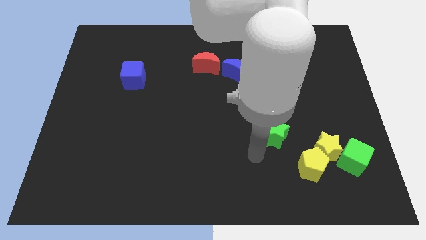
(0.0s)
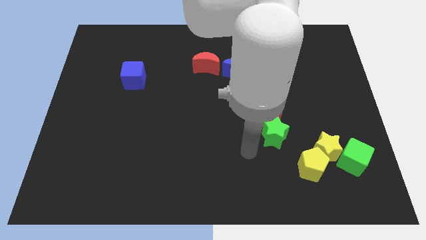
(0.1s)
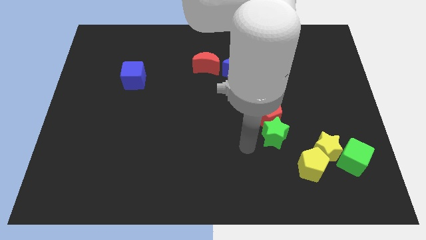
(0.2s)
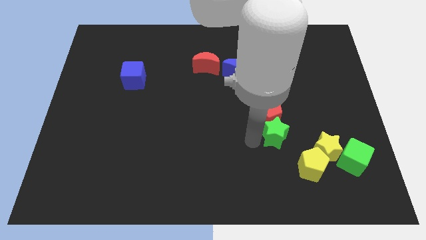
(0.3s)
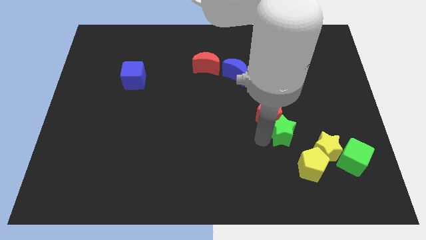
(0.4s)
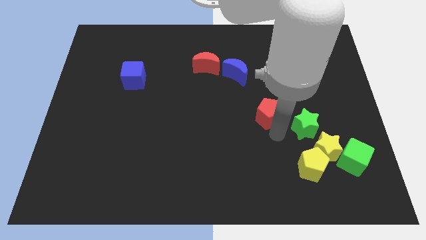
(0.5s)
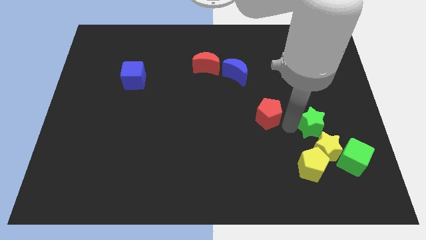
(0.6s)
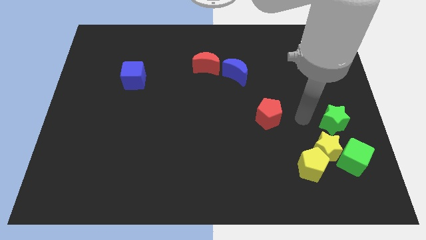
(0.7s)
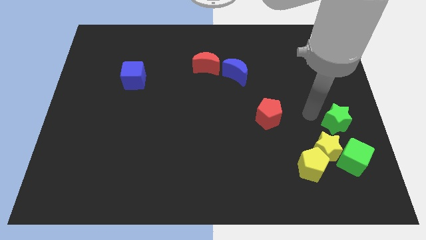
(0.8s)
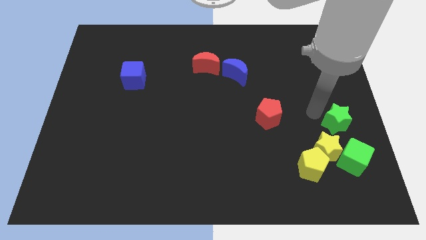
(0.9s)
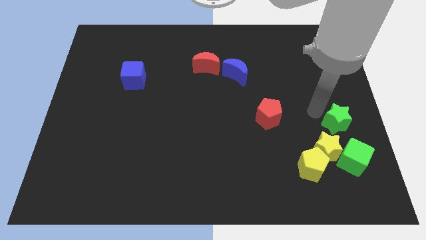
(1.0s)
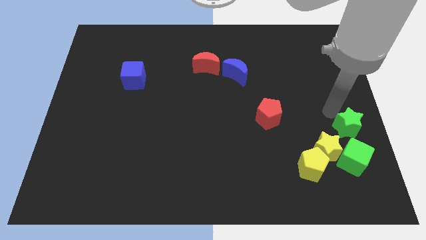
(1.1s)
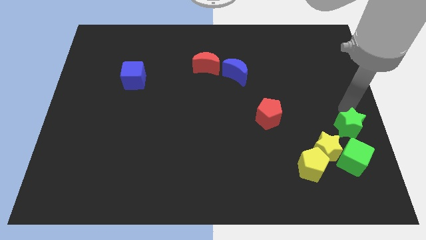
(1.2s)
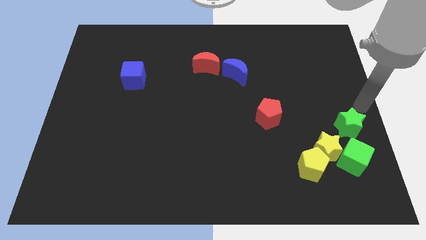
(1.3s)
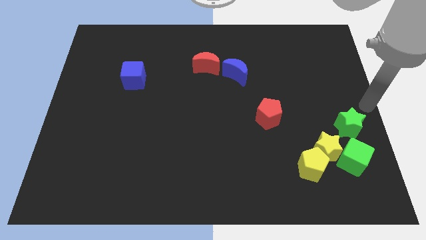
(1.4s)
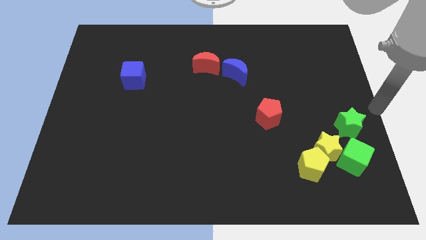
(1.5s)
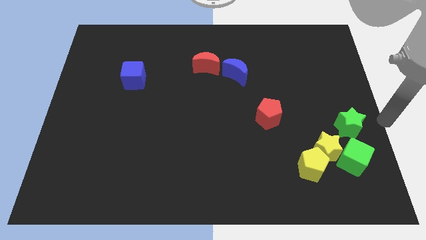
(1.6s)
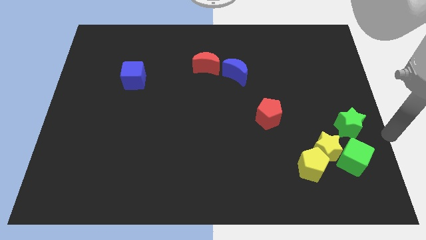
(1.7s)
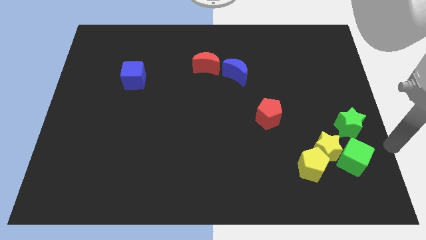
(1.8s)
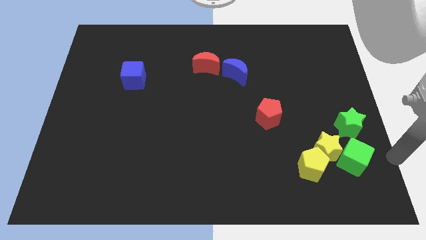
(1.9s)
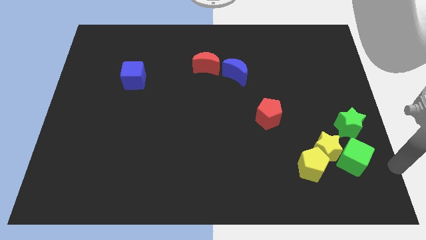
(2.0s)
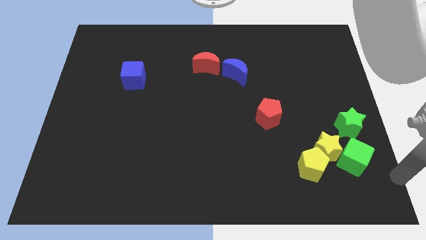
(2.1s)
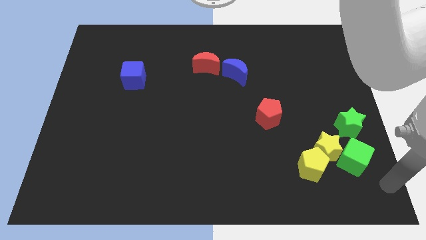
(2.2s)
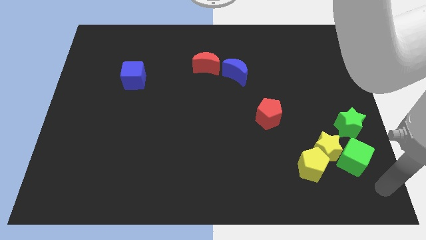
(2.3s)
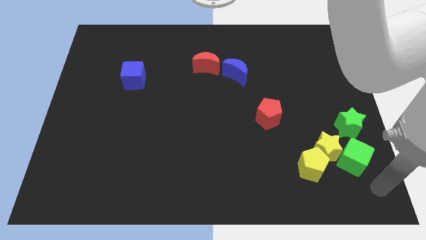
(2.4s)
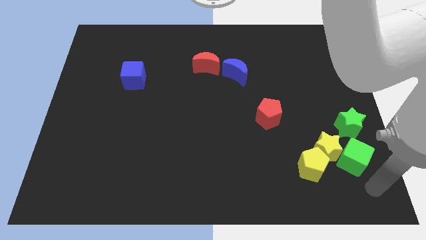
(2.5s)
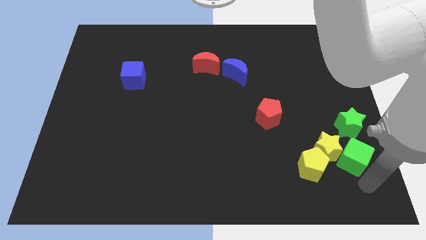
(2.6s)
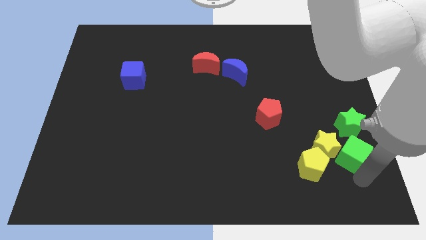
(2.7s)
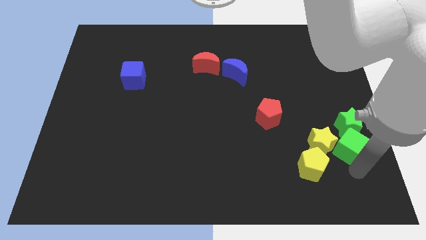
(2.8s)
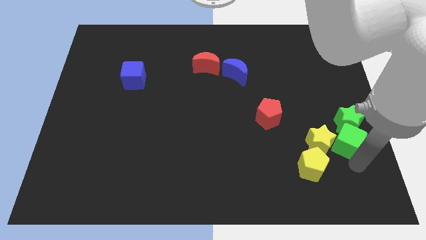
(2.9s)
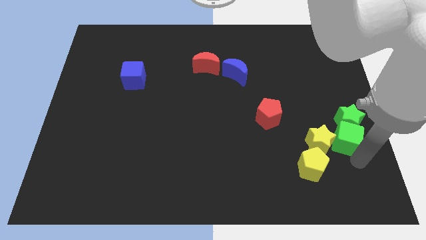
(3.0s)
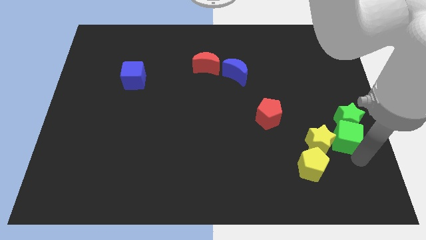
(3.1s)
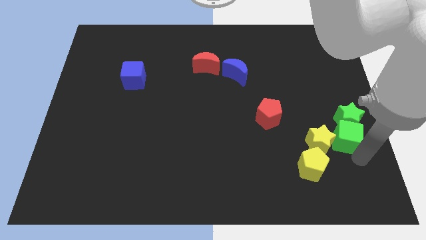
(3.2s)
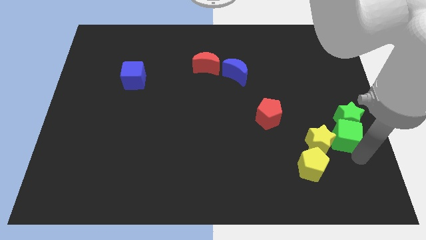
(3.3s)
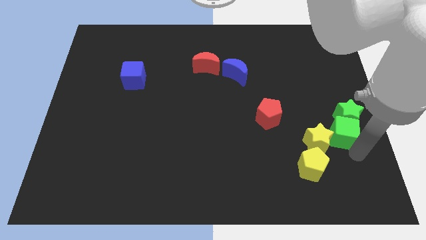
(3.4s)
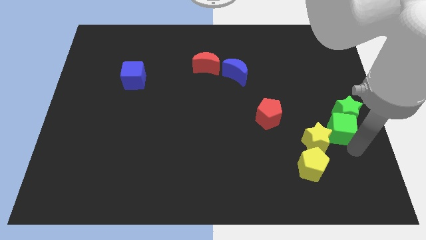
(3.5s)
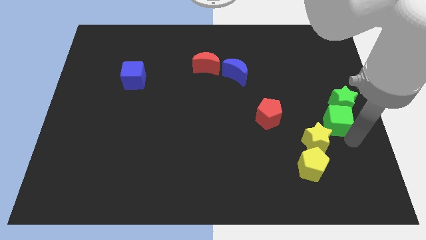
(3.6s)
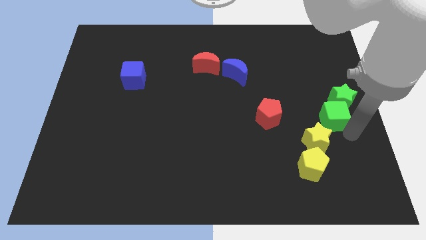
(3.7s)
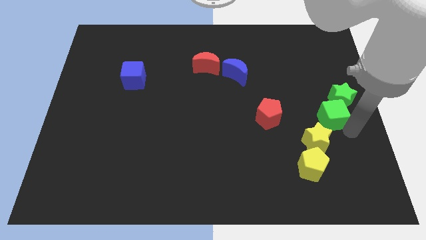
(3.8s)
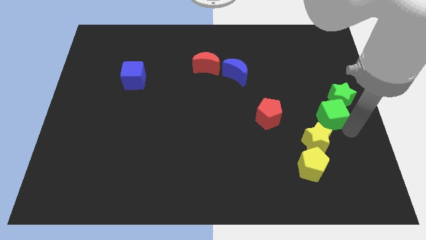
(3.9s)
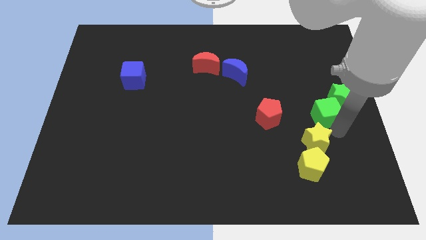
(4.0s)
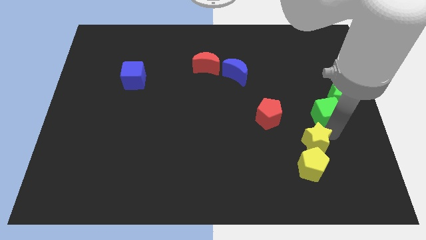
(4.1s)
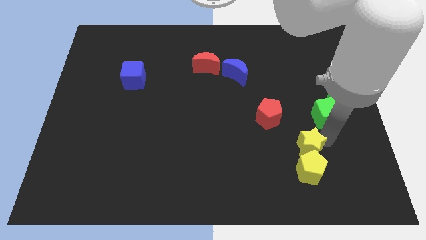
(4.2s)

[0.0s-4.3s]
drag both the green blocks together to the center right side of the board

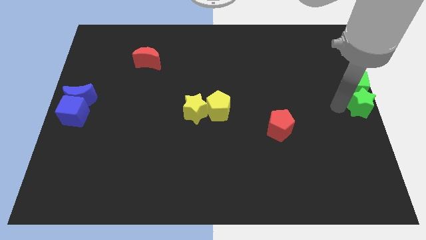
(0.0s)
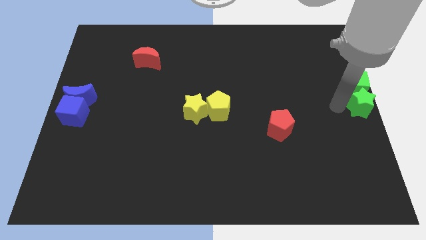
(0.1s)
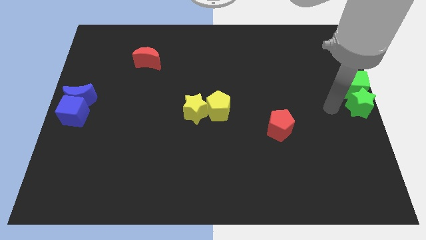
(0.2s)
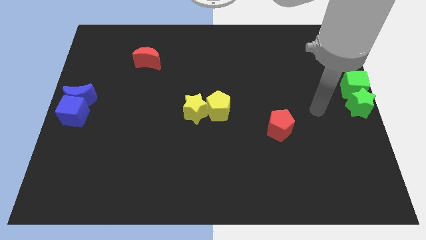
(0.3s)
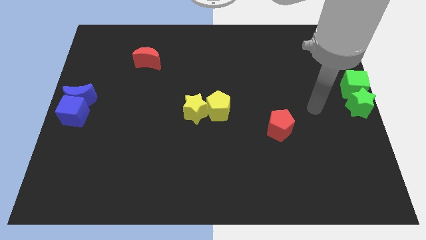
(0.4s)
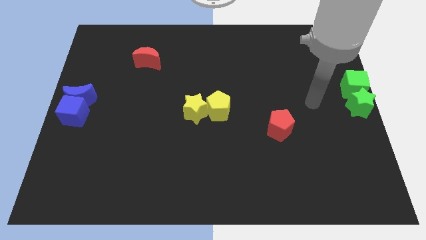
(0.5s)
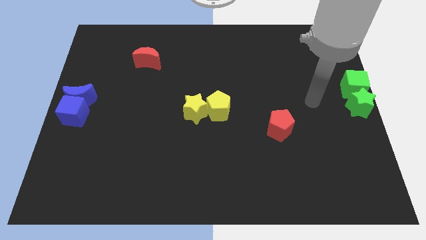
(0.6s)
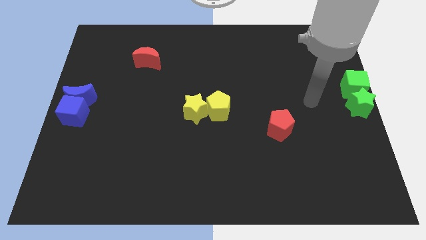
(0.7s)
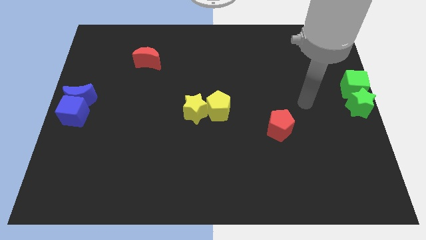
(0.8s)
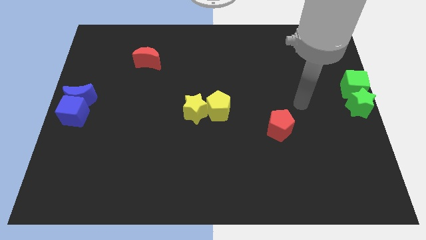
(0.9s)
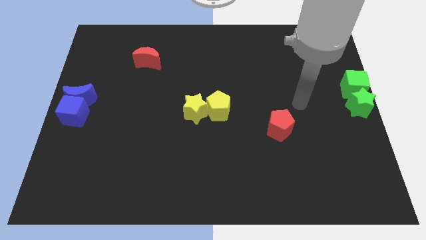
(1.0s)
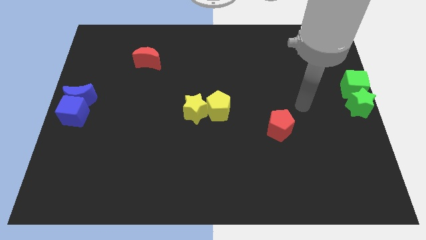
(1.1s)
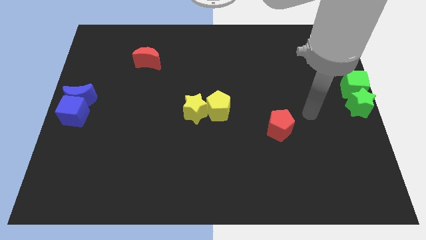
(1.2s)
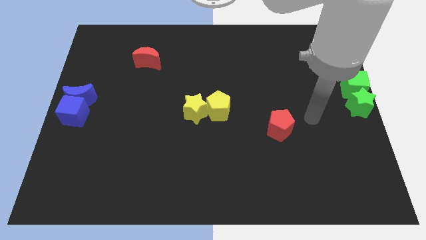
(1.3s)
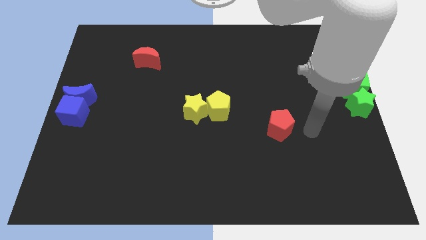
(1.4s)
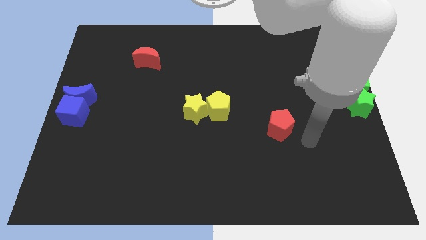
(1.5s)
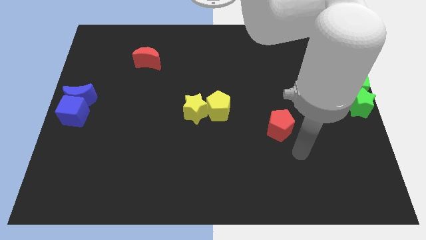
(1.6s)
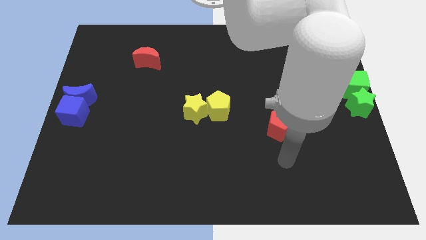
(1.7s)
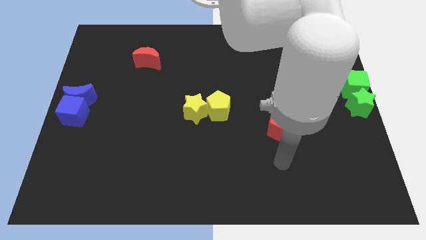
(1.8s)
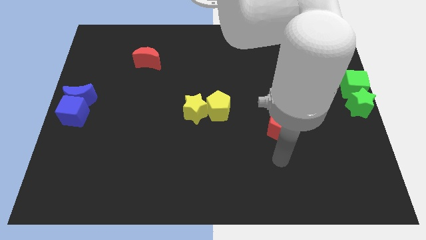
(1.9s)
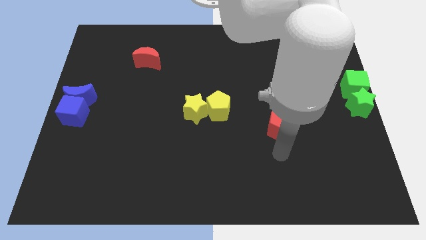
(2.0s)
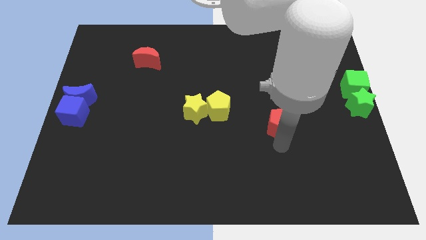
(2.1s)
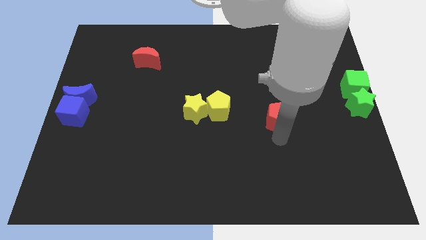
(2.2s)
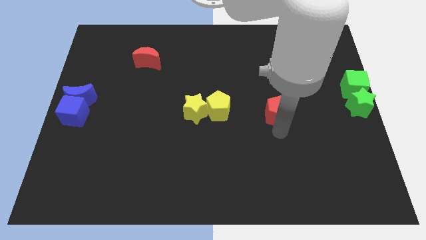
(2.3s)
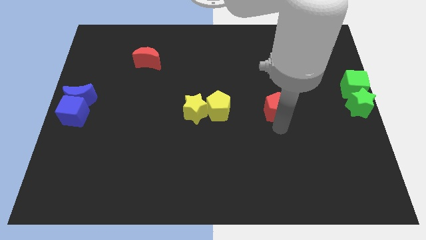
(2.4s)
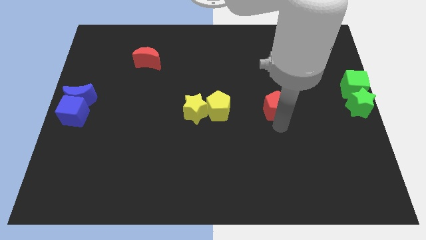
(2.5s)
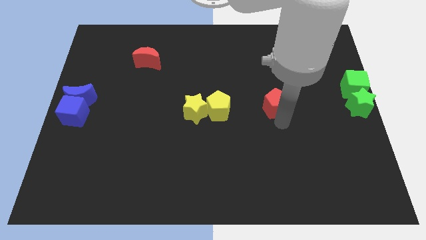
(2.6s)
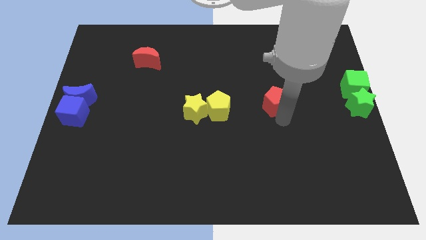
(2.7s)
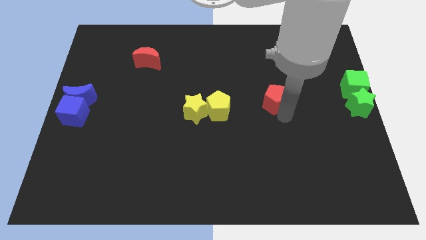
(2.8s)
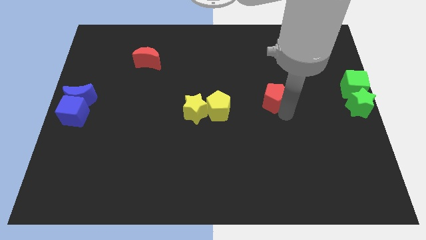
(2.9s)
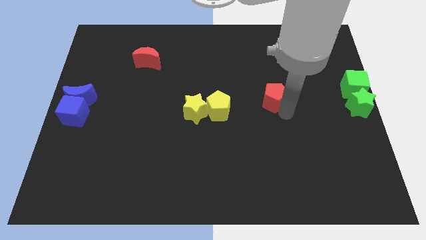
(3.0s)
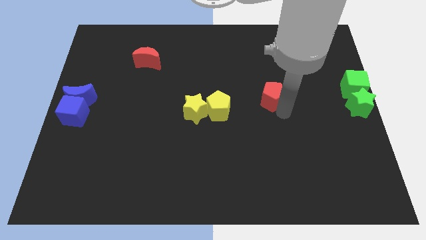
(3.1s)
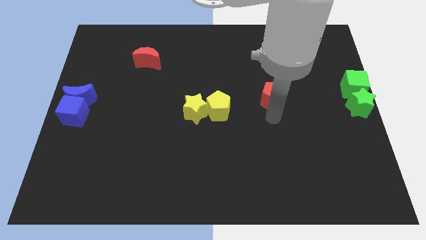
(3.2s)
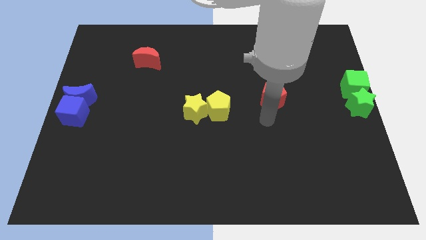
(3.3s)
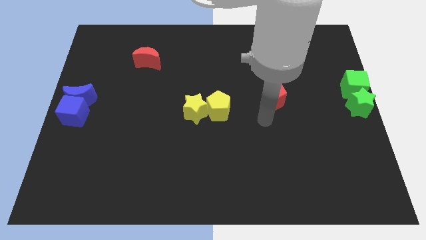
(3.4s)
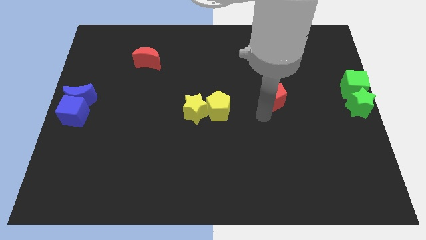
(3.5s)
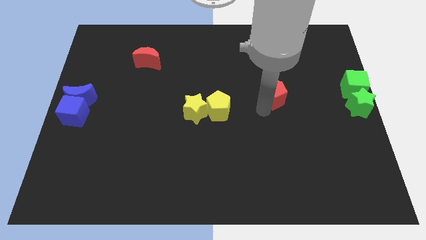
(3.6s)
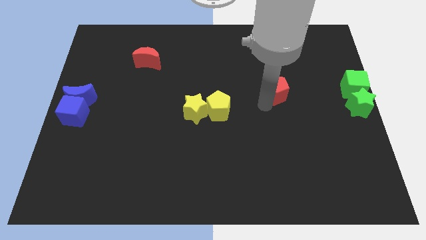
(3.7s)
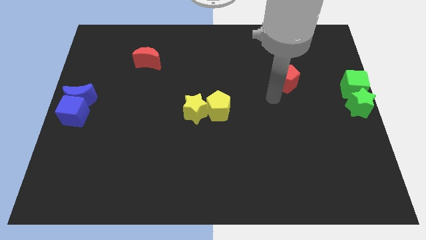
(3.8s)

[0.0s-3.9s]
move the red pentagon to the left of the green cube

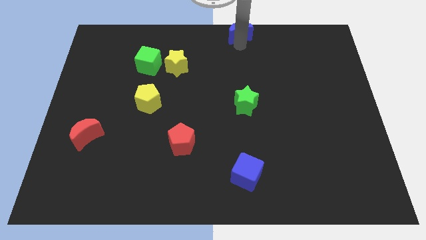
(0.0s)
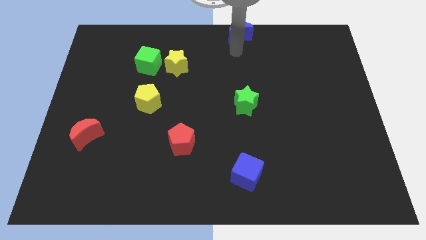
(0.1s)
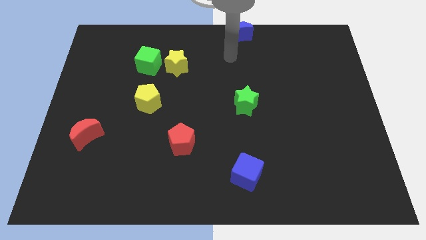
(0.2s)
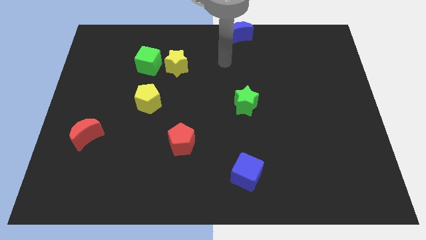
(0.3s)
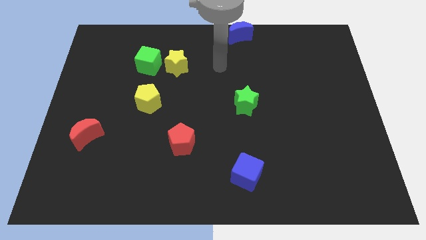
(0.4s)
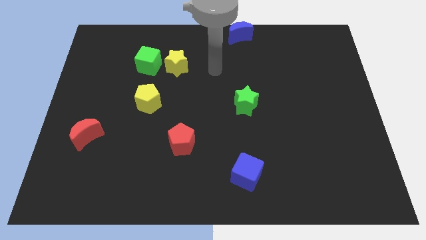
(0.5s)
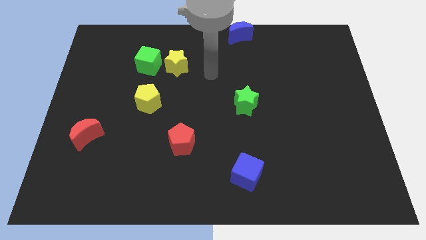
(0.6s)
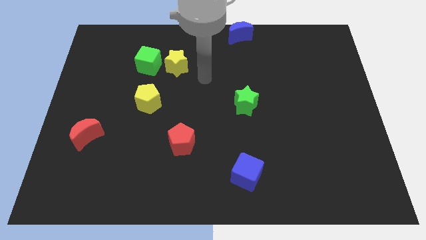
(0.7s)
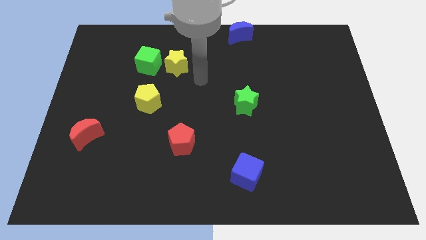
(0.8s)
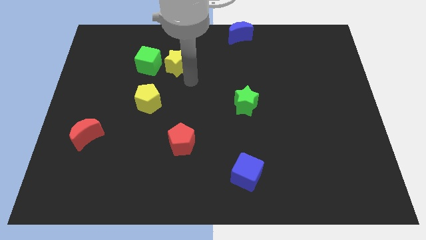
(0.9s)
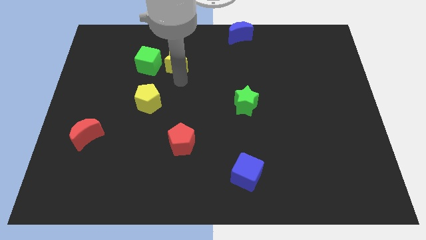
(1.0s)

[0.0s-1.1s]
move your arm away from blue moon
